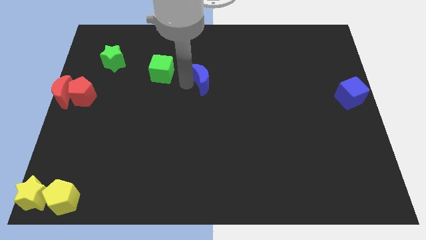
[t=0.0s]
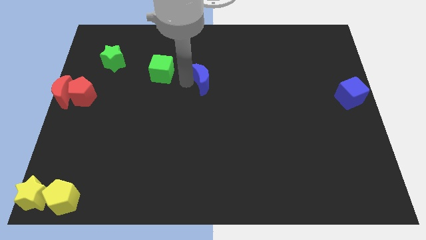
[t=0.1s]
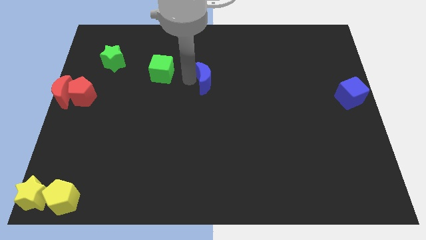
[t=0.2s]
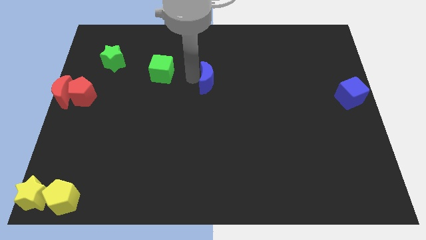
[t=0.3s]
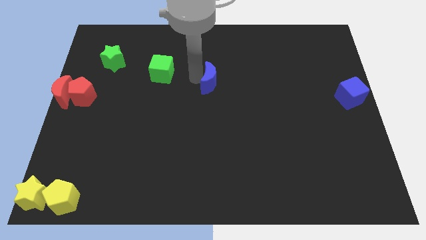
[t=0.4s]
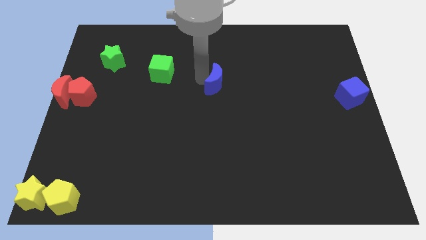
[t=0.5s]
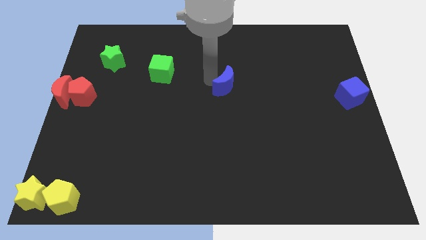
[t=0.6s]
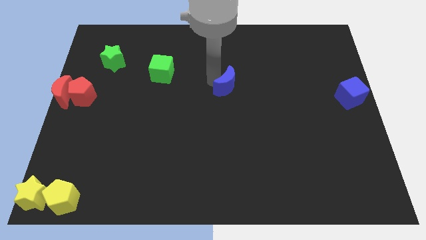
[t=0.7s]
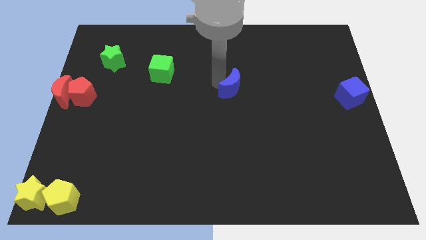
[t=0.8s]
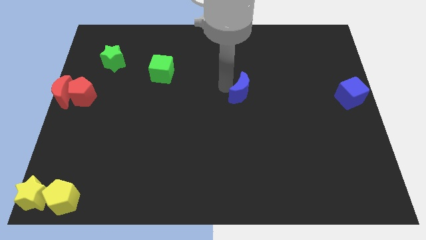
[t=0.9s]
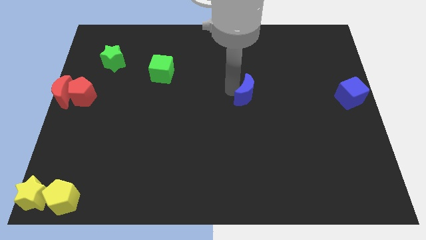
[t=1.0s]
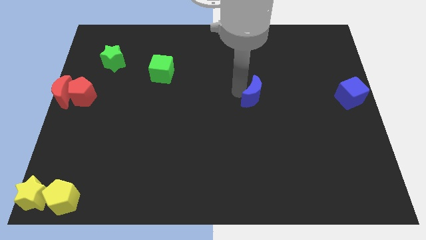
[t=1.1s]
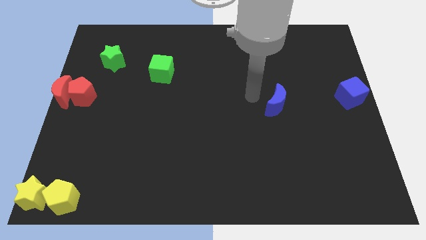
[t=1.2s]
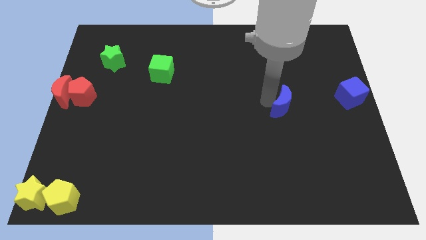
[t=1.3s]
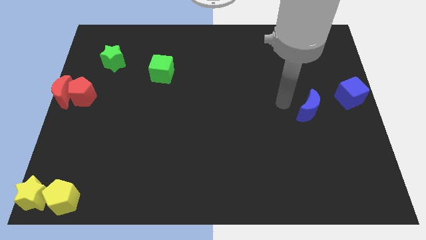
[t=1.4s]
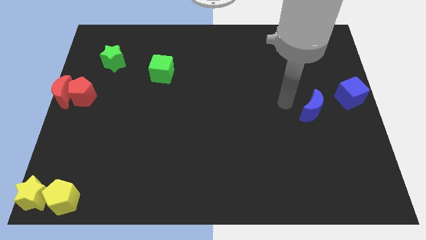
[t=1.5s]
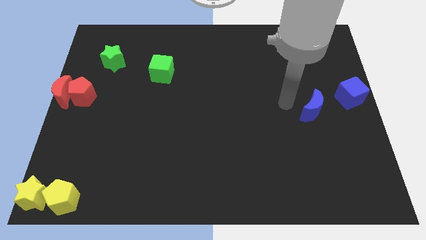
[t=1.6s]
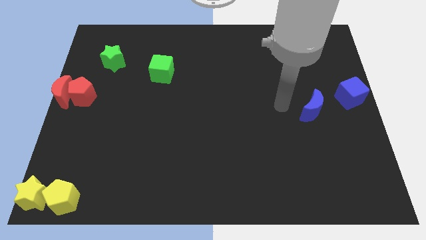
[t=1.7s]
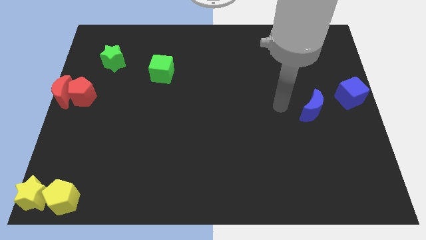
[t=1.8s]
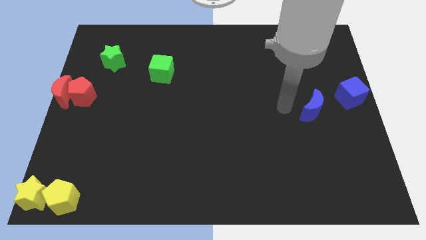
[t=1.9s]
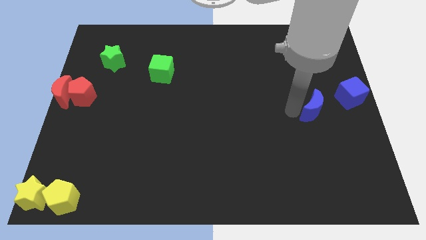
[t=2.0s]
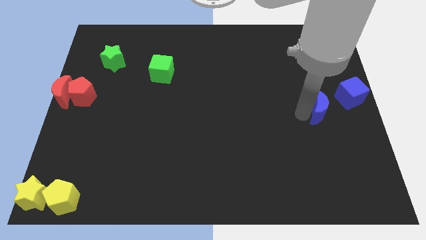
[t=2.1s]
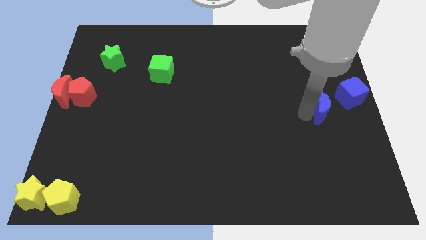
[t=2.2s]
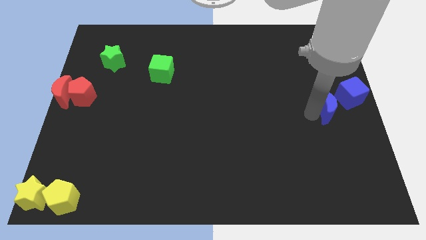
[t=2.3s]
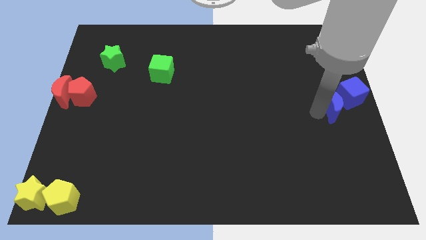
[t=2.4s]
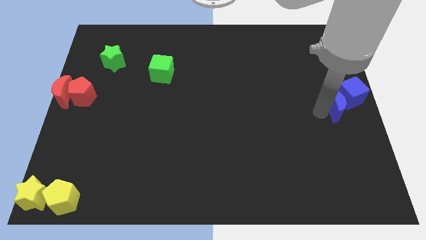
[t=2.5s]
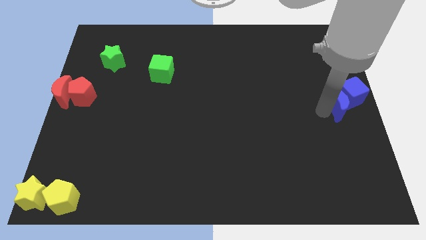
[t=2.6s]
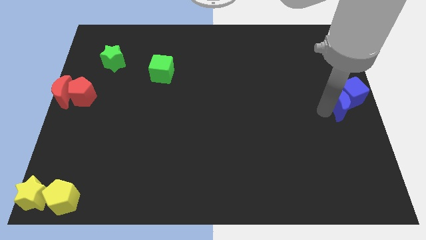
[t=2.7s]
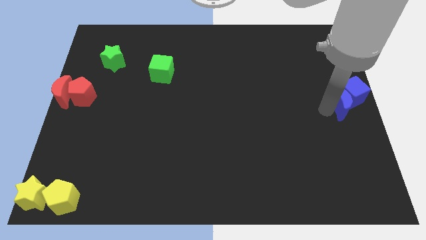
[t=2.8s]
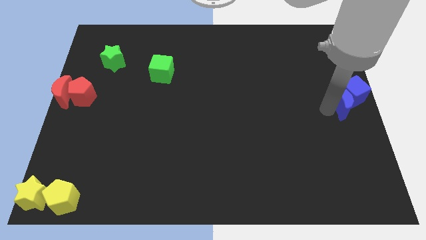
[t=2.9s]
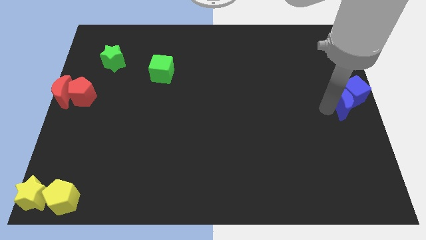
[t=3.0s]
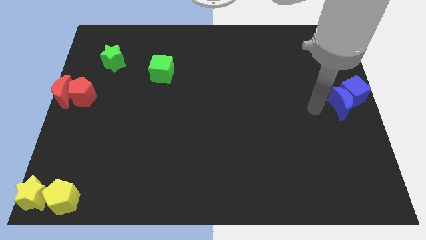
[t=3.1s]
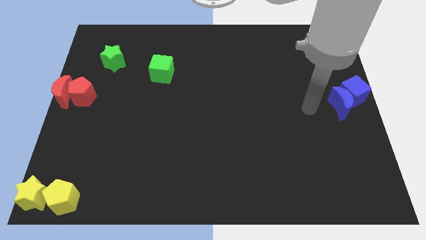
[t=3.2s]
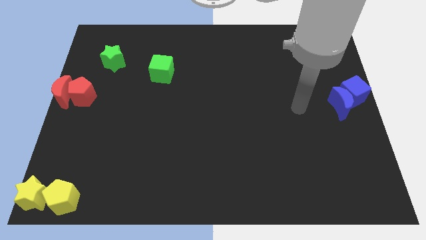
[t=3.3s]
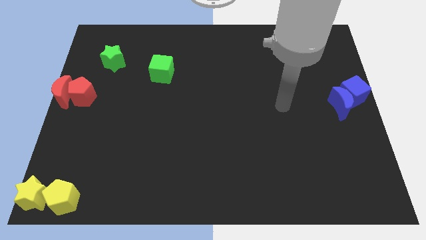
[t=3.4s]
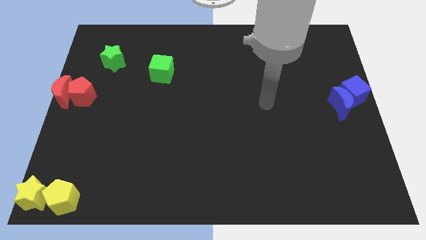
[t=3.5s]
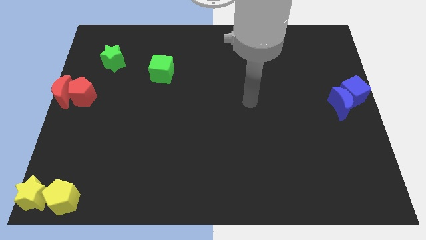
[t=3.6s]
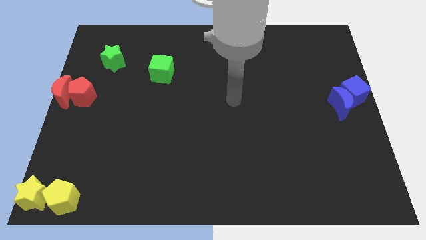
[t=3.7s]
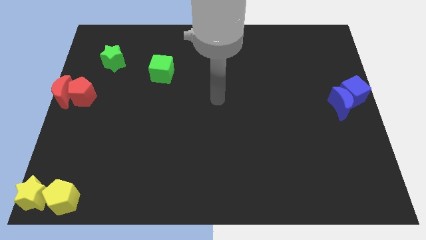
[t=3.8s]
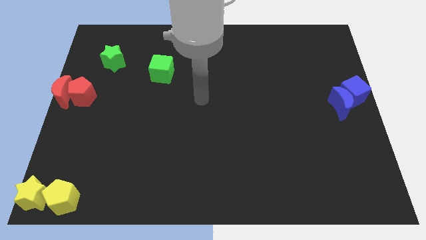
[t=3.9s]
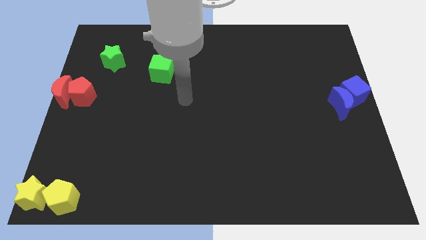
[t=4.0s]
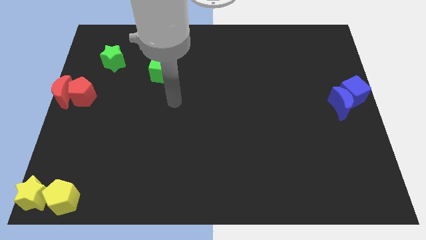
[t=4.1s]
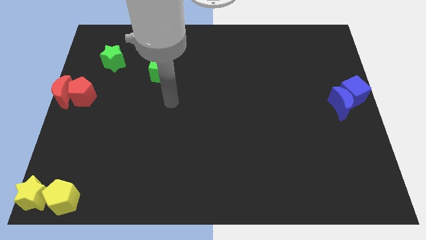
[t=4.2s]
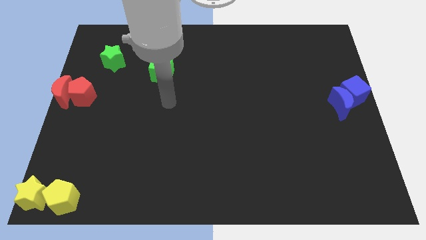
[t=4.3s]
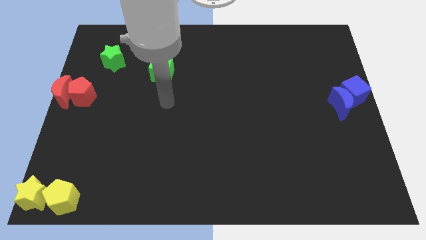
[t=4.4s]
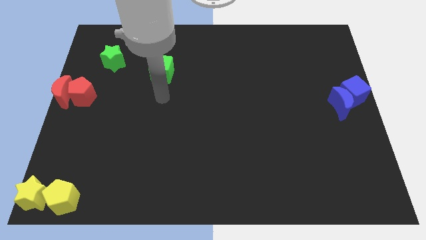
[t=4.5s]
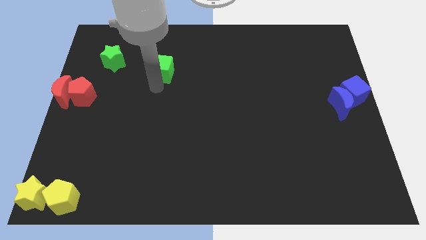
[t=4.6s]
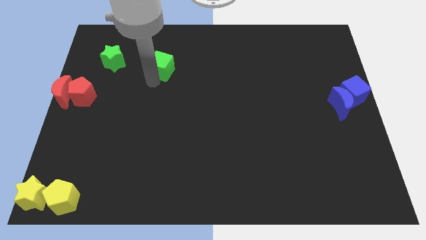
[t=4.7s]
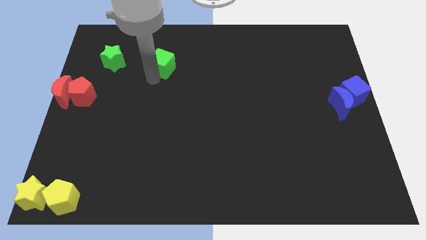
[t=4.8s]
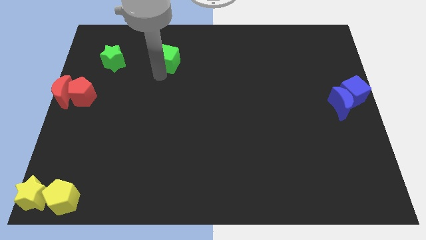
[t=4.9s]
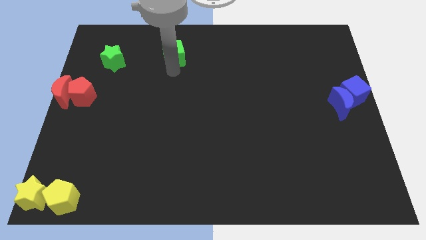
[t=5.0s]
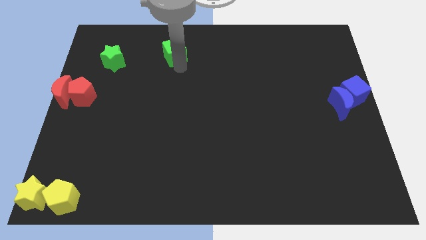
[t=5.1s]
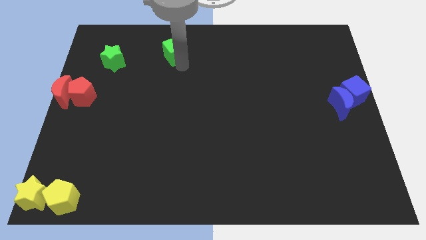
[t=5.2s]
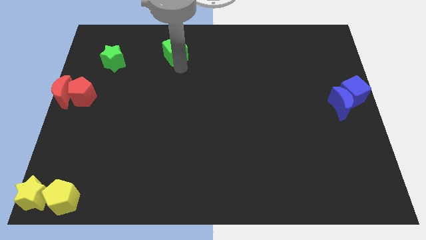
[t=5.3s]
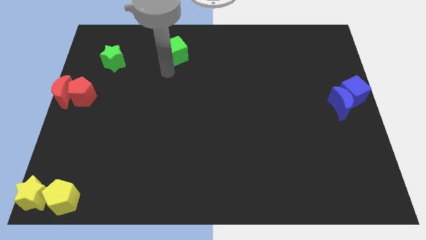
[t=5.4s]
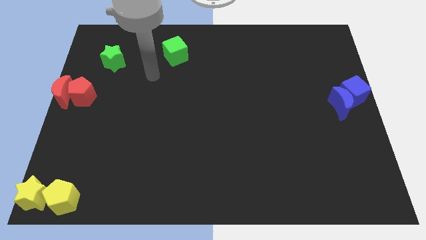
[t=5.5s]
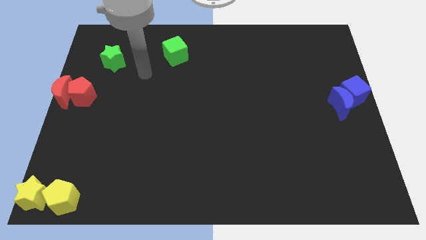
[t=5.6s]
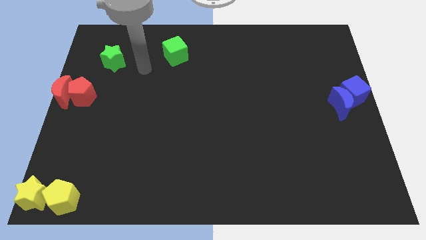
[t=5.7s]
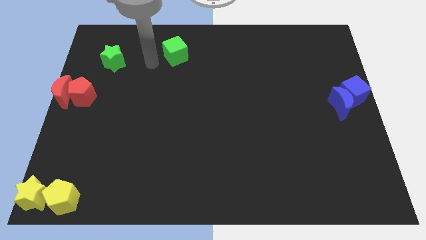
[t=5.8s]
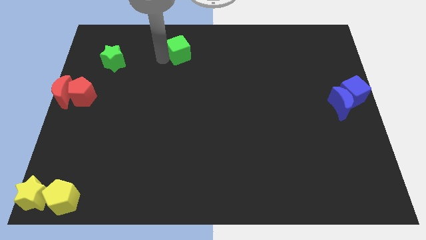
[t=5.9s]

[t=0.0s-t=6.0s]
push the blue moon to the right center of the board

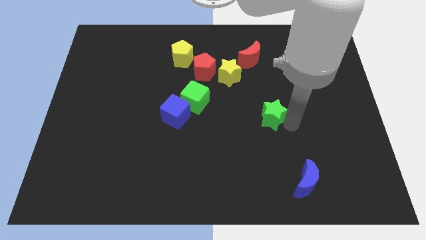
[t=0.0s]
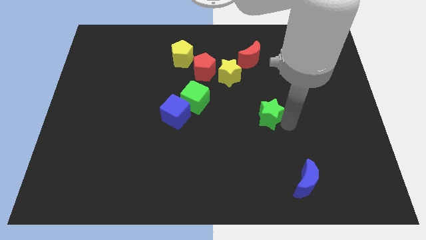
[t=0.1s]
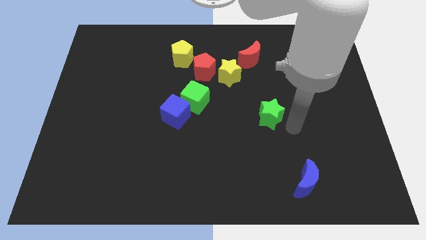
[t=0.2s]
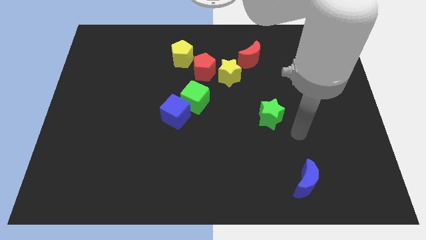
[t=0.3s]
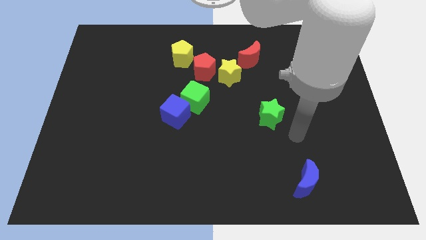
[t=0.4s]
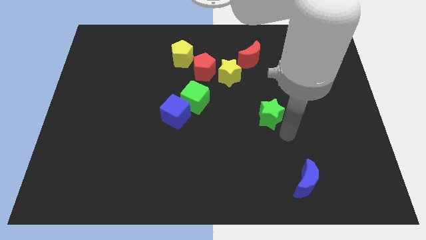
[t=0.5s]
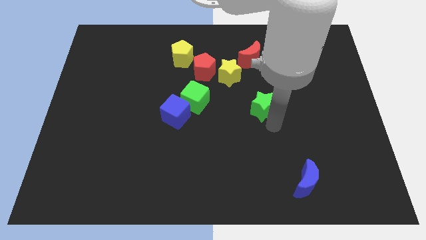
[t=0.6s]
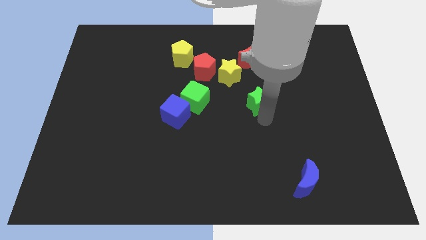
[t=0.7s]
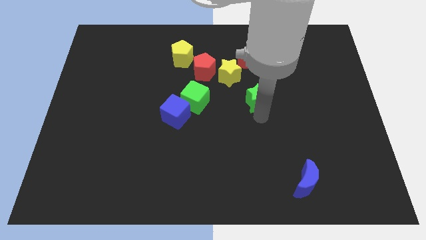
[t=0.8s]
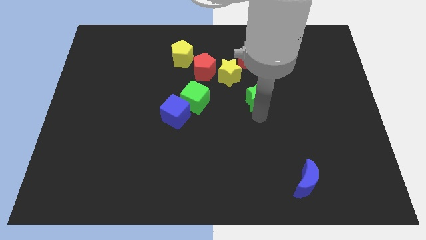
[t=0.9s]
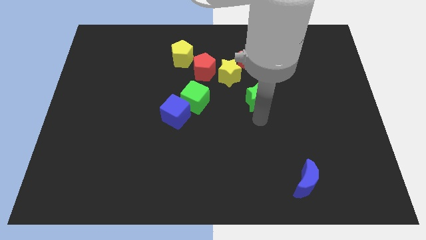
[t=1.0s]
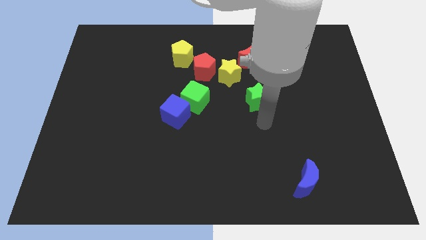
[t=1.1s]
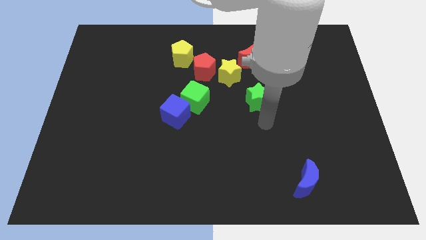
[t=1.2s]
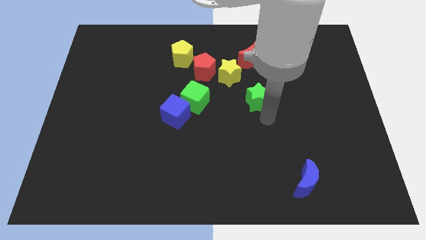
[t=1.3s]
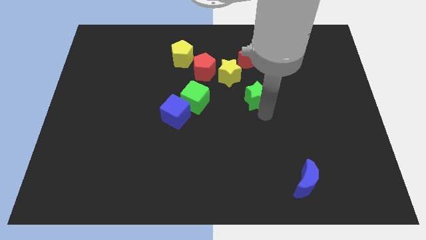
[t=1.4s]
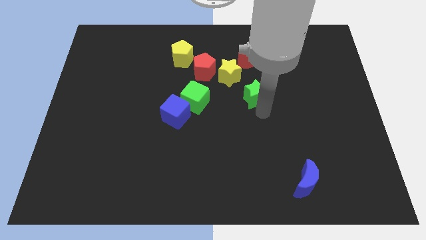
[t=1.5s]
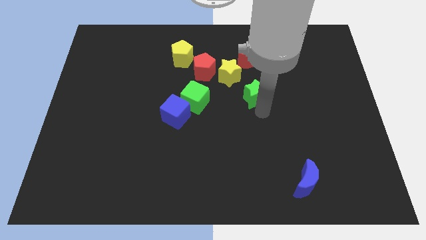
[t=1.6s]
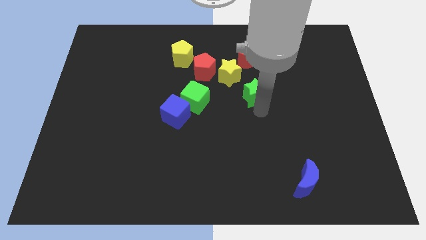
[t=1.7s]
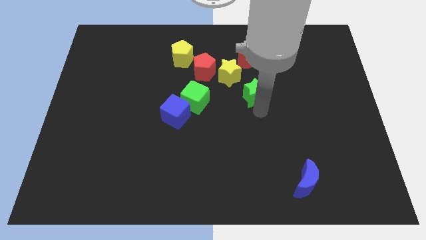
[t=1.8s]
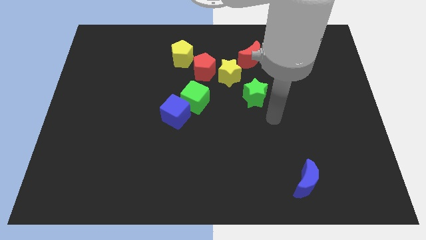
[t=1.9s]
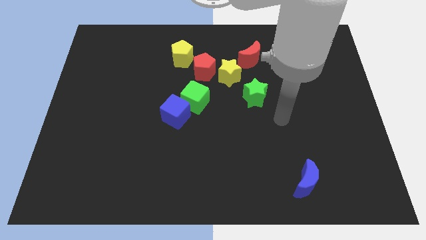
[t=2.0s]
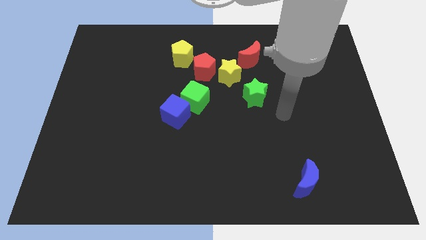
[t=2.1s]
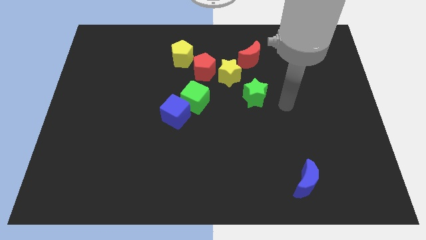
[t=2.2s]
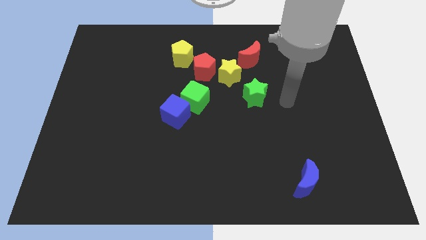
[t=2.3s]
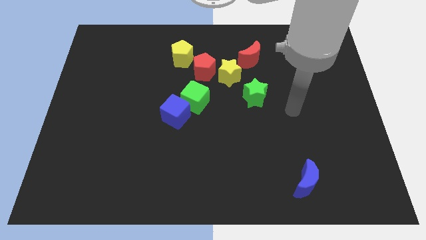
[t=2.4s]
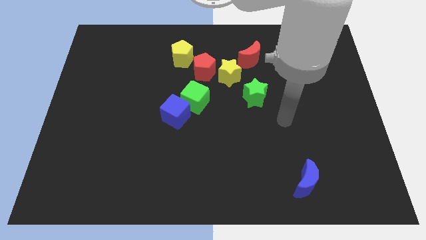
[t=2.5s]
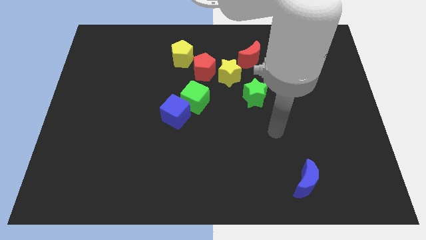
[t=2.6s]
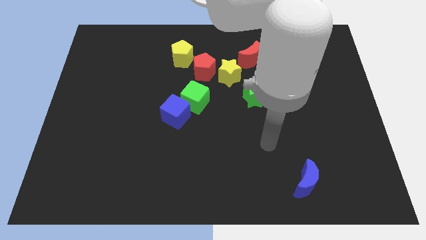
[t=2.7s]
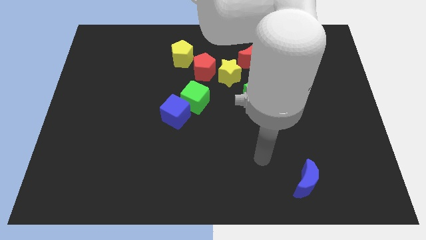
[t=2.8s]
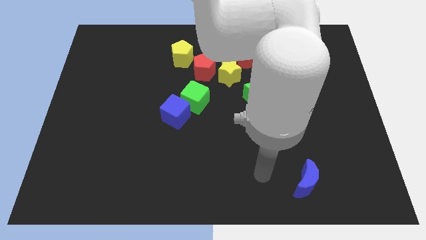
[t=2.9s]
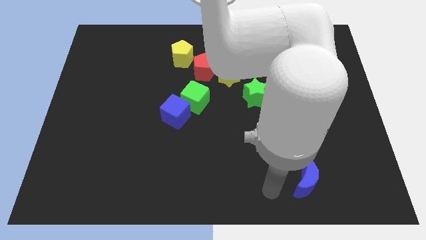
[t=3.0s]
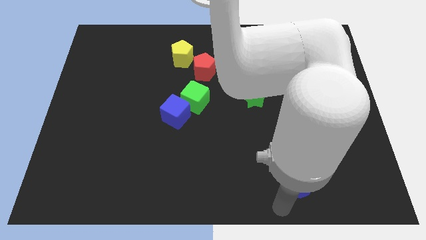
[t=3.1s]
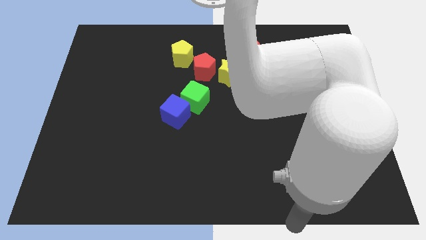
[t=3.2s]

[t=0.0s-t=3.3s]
place green star horizontally right to green cube
